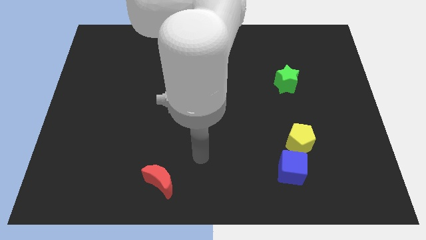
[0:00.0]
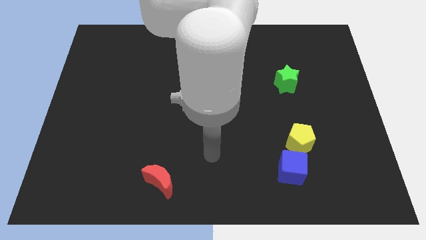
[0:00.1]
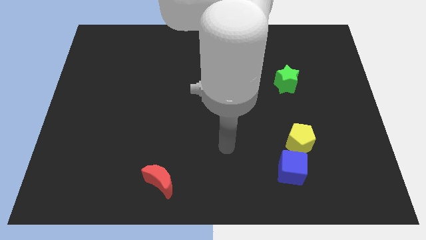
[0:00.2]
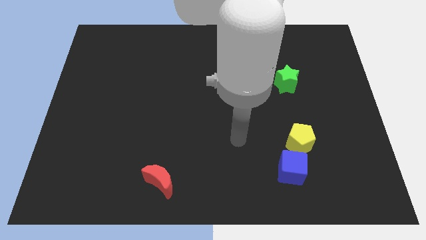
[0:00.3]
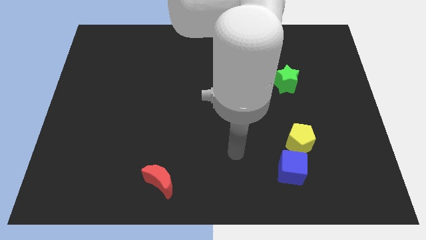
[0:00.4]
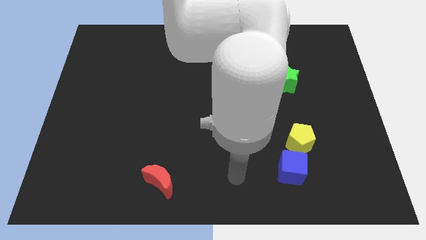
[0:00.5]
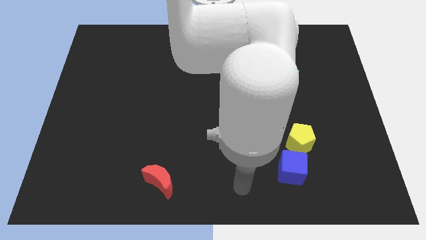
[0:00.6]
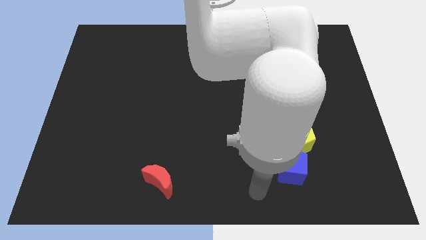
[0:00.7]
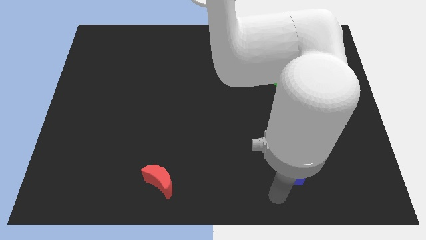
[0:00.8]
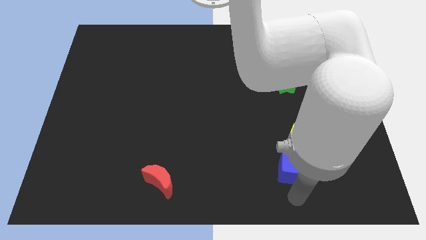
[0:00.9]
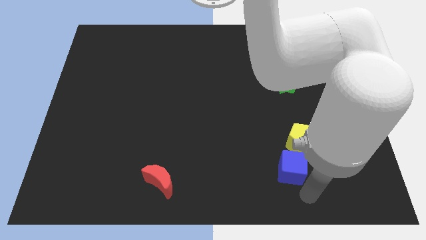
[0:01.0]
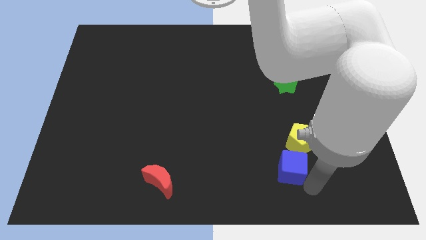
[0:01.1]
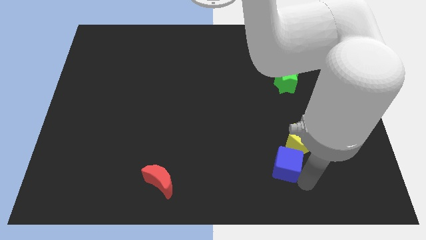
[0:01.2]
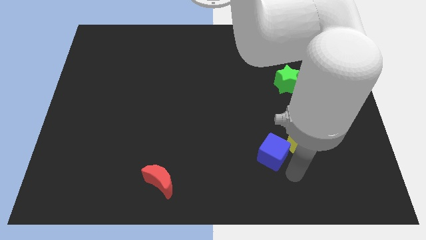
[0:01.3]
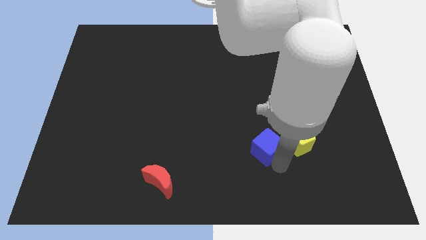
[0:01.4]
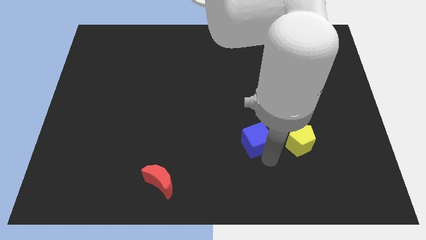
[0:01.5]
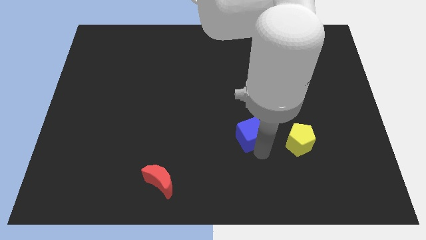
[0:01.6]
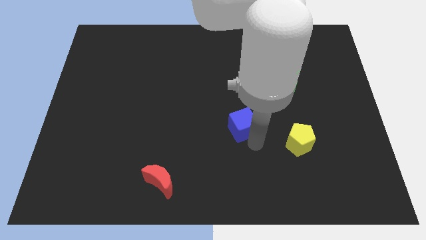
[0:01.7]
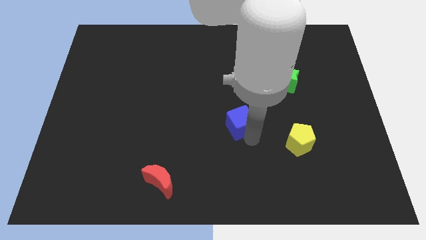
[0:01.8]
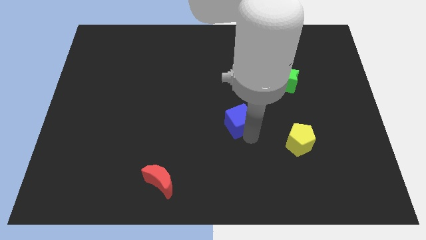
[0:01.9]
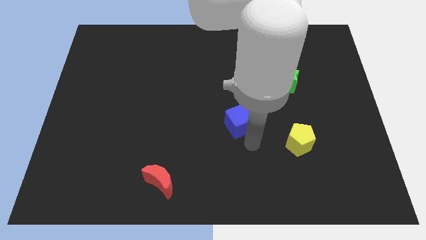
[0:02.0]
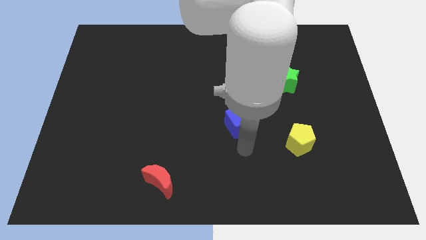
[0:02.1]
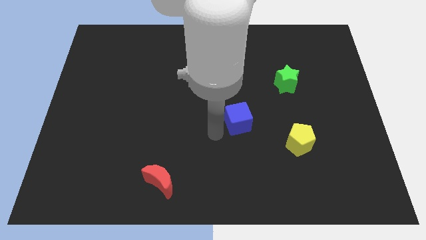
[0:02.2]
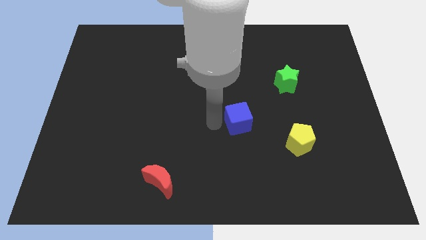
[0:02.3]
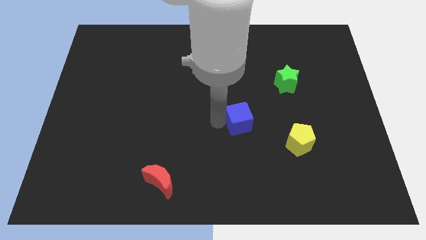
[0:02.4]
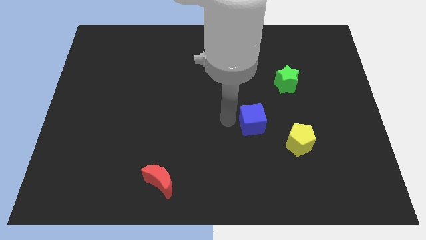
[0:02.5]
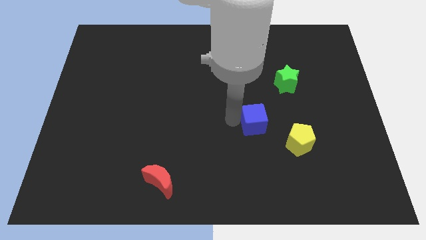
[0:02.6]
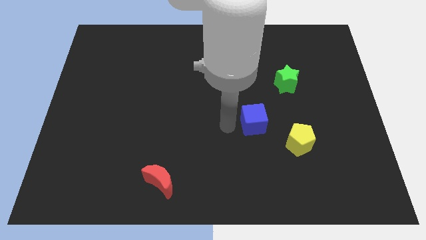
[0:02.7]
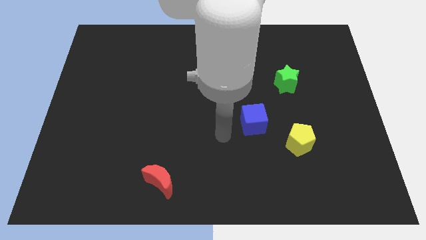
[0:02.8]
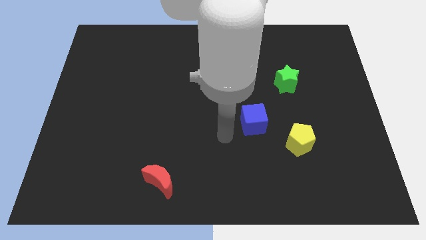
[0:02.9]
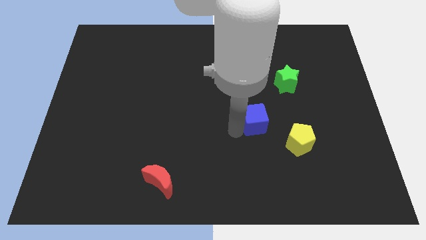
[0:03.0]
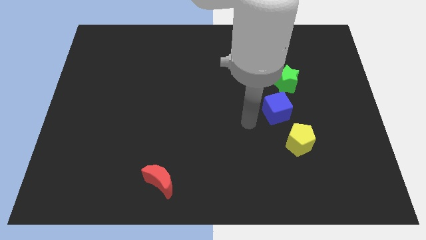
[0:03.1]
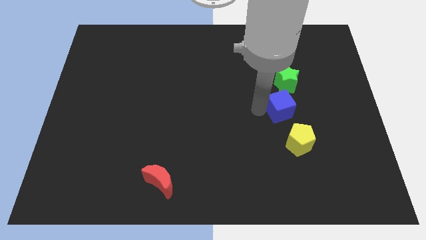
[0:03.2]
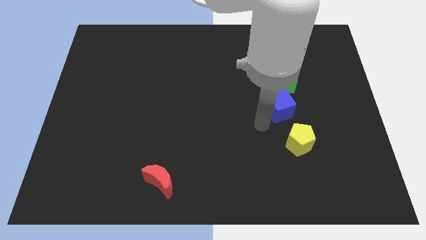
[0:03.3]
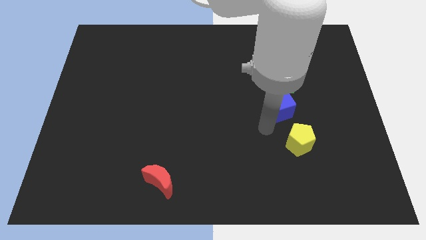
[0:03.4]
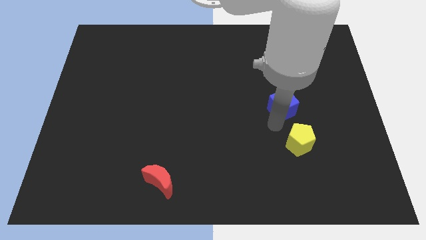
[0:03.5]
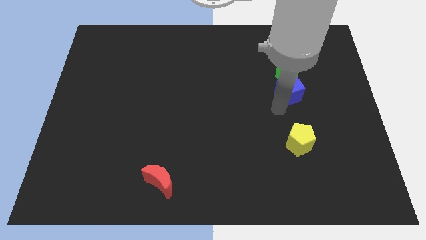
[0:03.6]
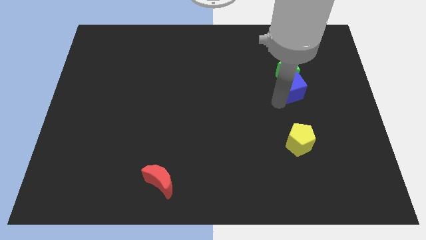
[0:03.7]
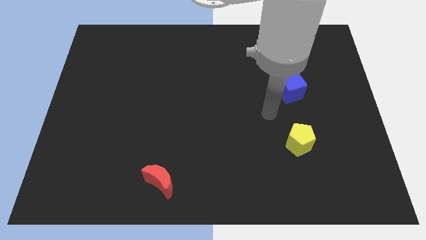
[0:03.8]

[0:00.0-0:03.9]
put the cube to the star

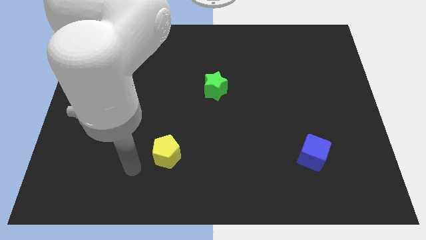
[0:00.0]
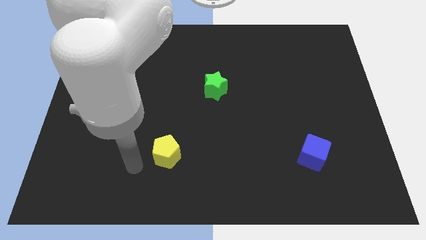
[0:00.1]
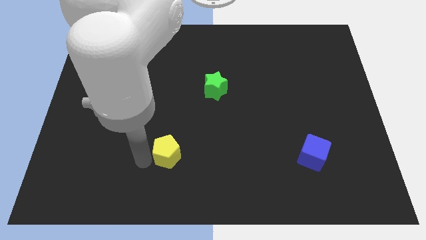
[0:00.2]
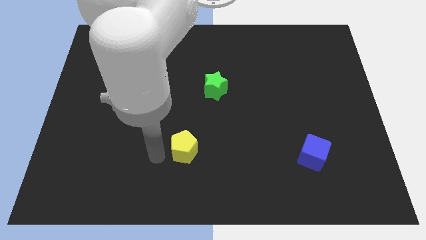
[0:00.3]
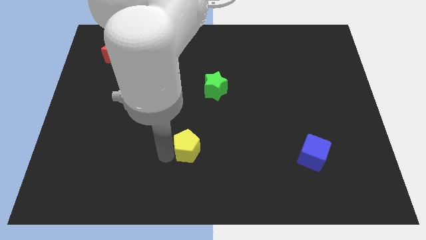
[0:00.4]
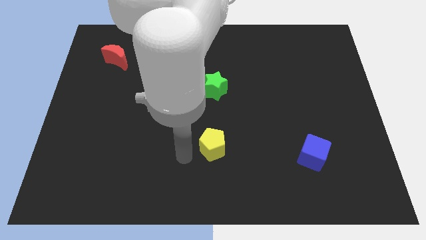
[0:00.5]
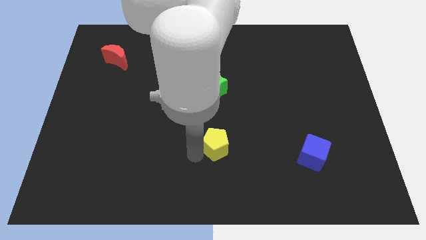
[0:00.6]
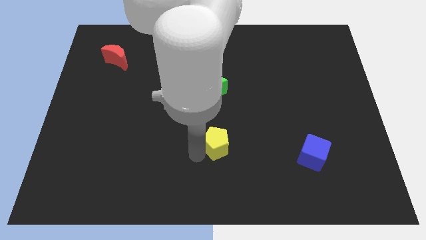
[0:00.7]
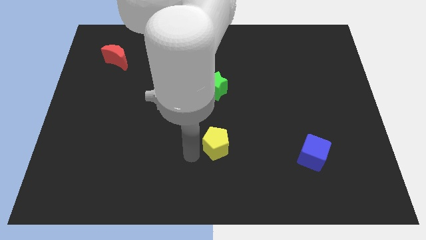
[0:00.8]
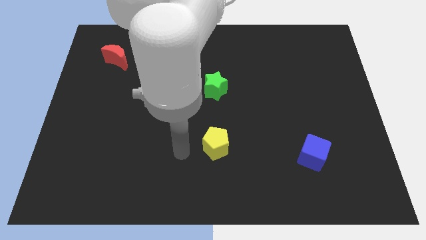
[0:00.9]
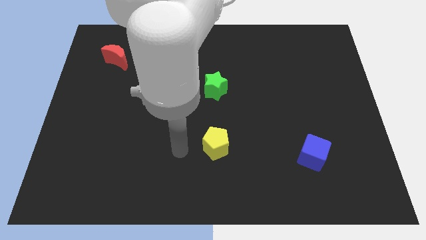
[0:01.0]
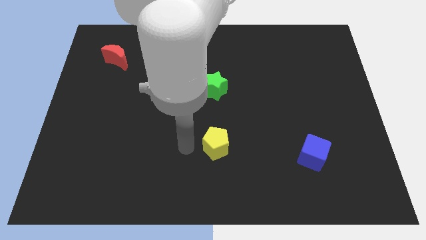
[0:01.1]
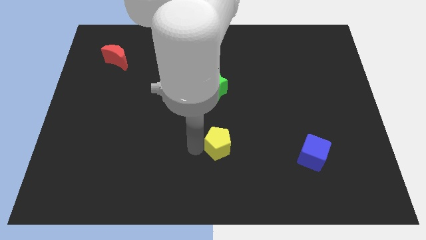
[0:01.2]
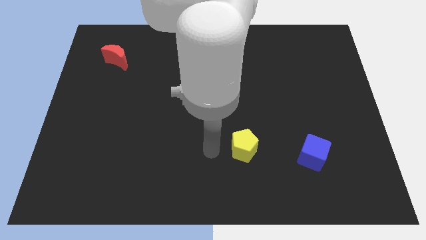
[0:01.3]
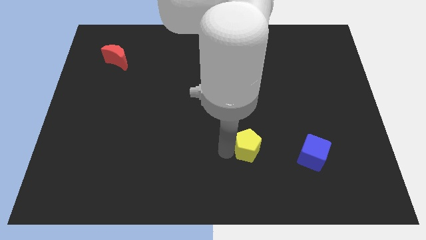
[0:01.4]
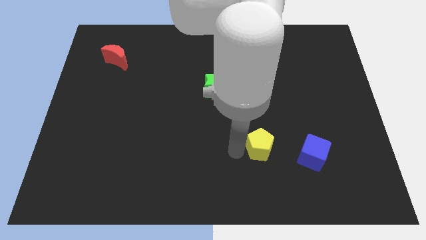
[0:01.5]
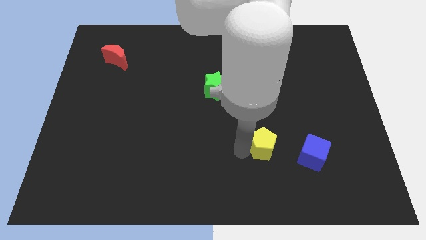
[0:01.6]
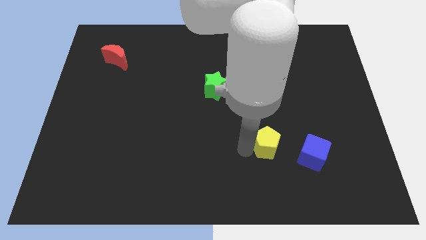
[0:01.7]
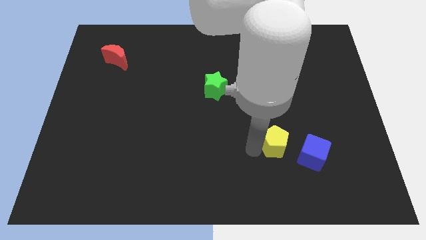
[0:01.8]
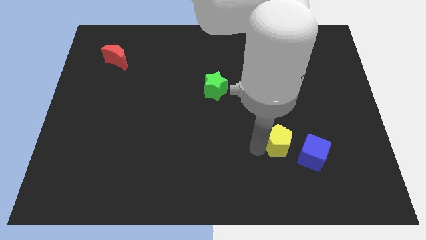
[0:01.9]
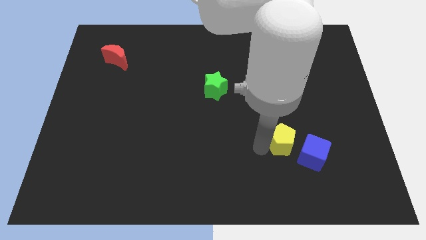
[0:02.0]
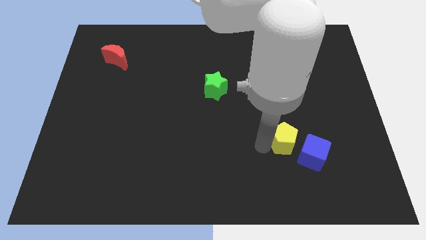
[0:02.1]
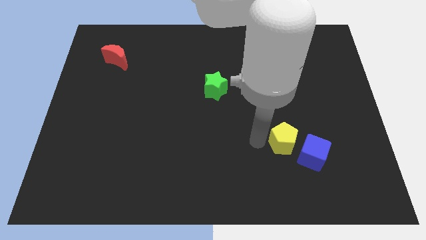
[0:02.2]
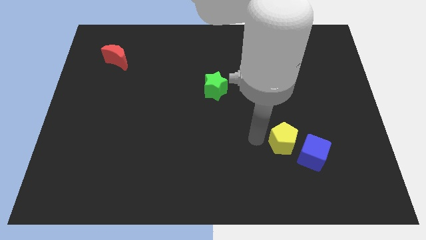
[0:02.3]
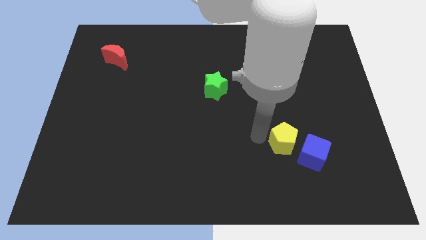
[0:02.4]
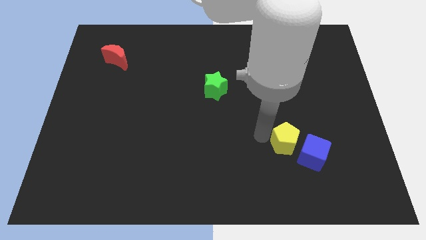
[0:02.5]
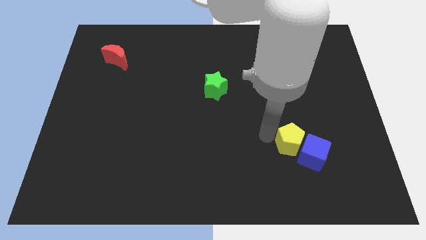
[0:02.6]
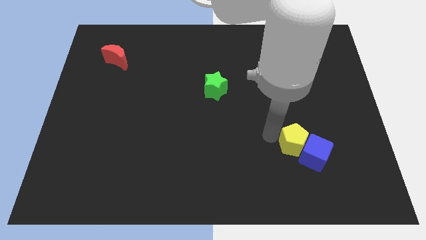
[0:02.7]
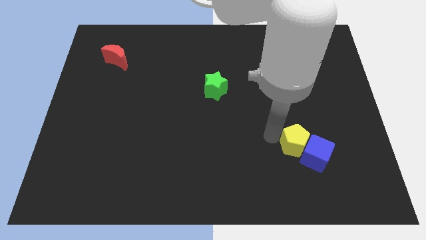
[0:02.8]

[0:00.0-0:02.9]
put the yellow pentagon towards the cube

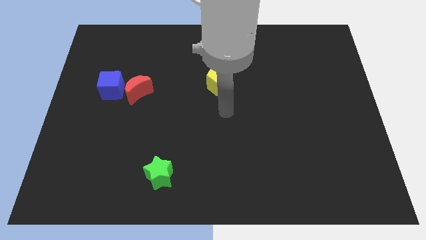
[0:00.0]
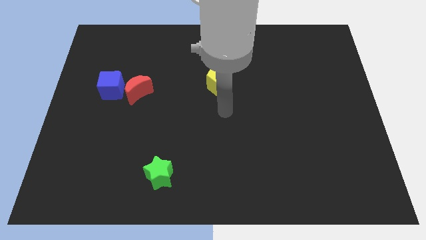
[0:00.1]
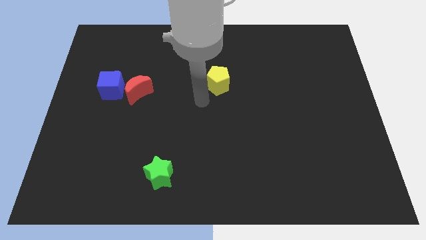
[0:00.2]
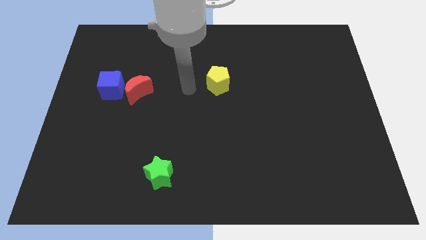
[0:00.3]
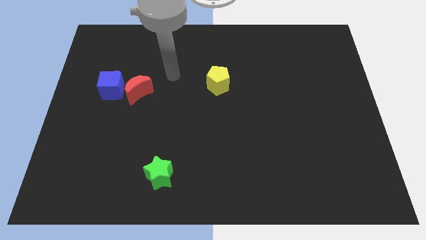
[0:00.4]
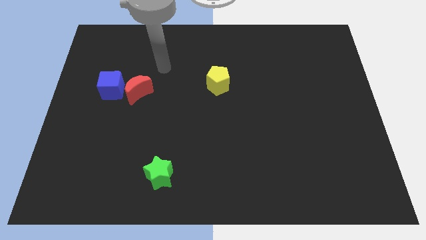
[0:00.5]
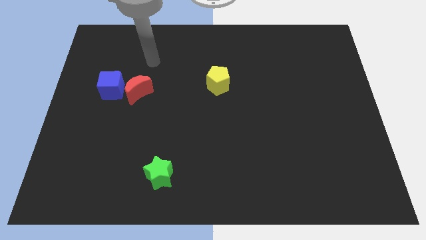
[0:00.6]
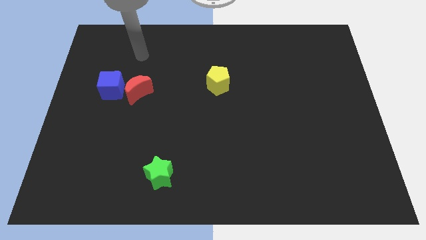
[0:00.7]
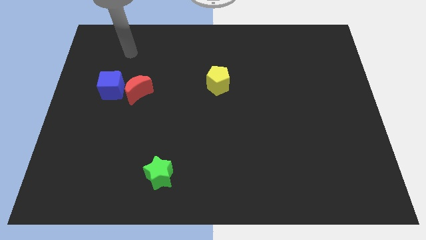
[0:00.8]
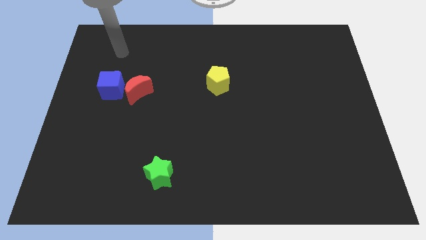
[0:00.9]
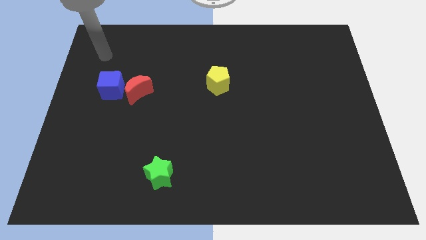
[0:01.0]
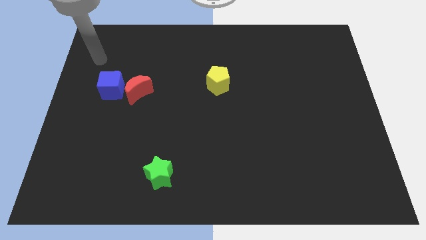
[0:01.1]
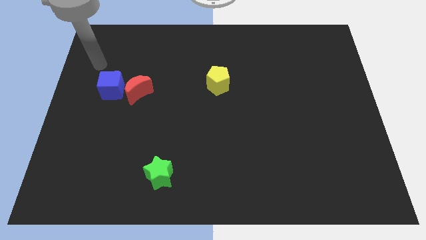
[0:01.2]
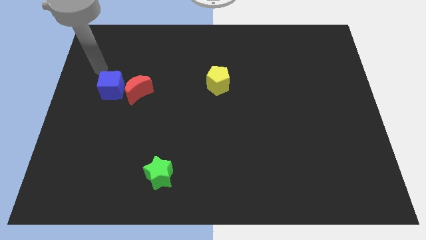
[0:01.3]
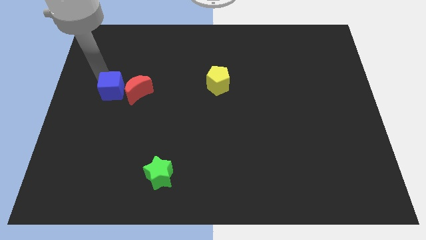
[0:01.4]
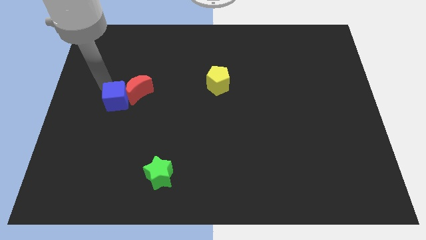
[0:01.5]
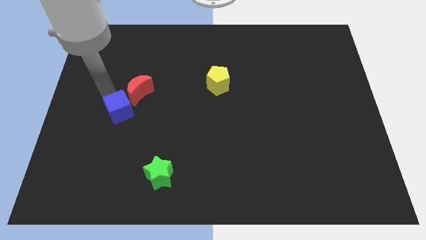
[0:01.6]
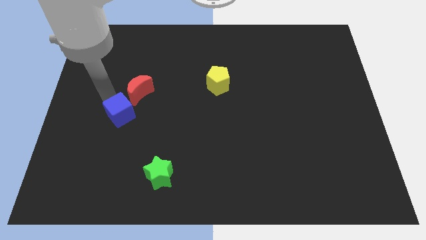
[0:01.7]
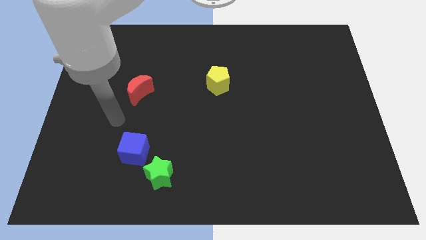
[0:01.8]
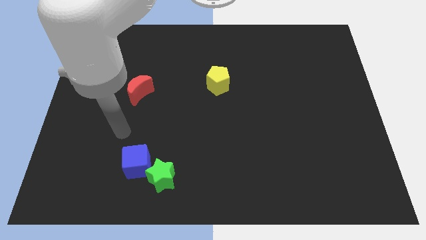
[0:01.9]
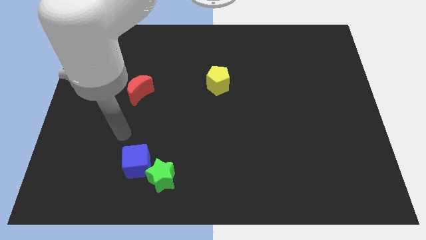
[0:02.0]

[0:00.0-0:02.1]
put the blue cube close to the star

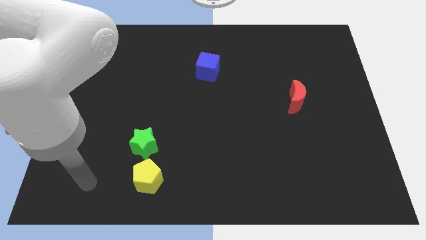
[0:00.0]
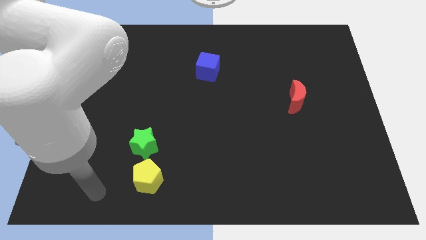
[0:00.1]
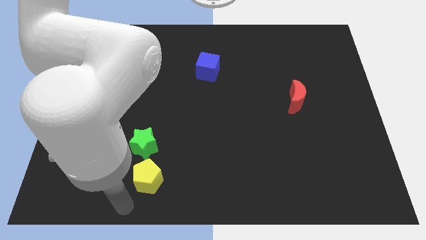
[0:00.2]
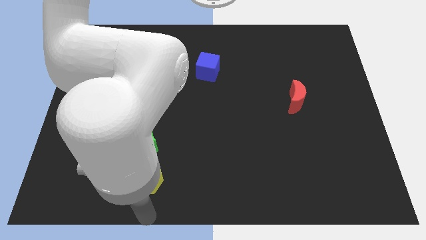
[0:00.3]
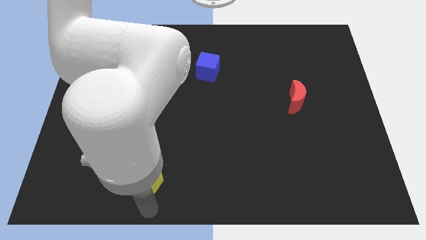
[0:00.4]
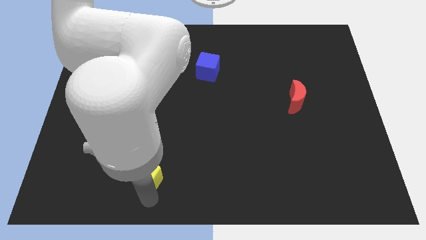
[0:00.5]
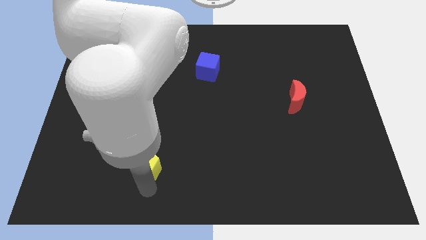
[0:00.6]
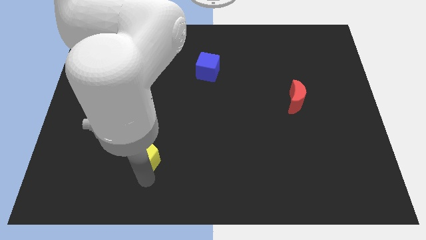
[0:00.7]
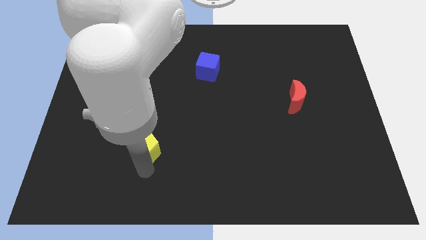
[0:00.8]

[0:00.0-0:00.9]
slide the yellow block to the star
